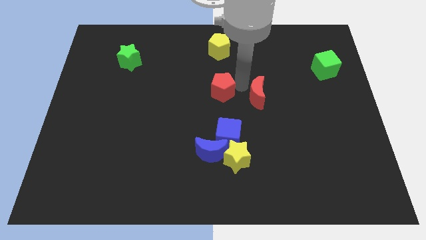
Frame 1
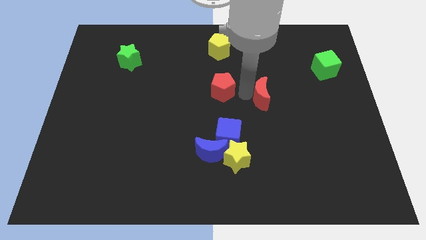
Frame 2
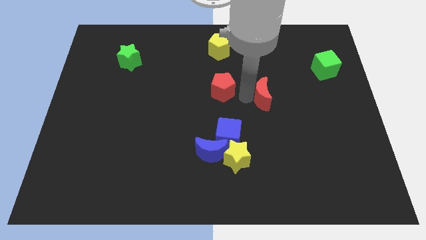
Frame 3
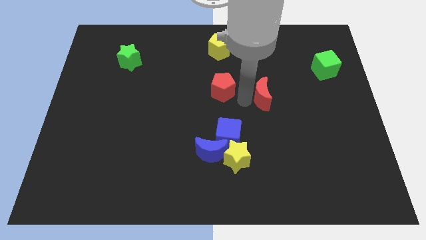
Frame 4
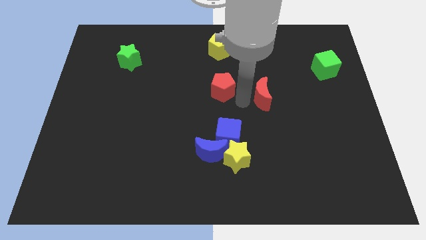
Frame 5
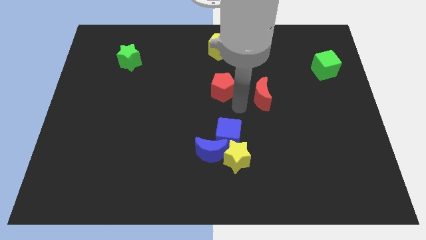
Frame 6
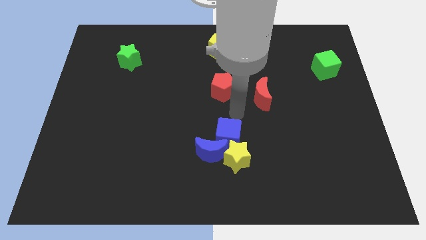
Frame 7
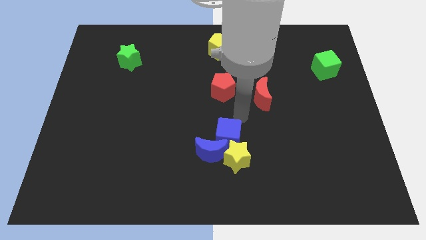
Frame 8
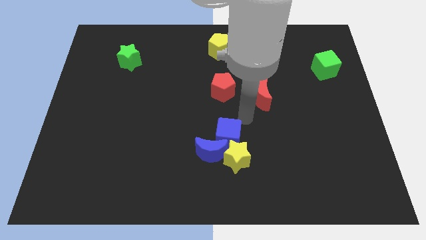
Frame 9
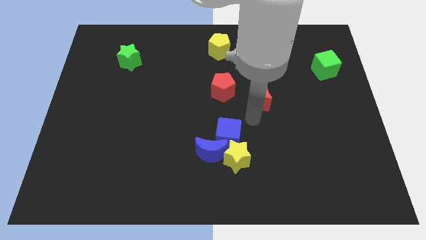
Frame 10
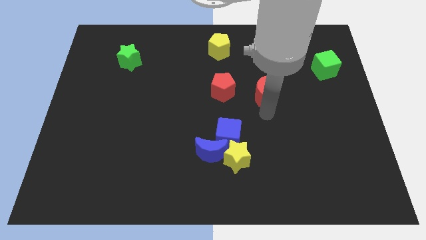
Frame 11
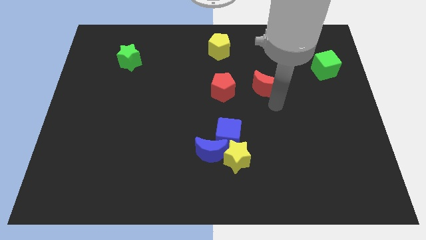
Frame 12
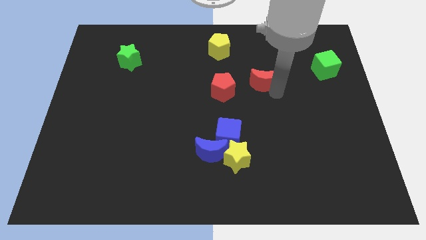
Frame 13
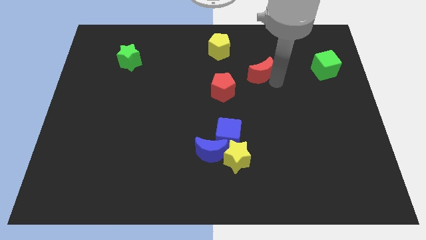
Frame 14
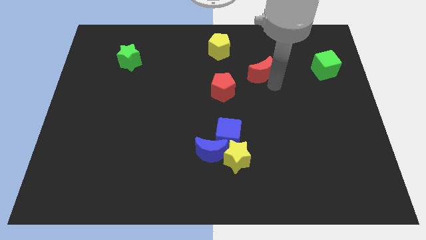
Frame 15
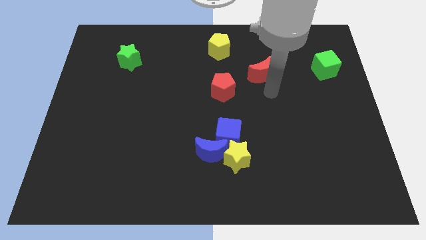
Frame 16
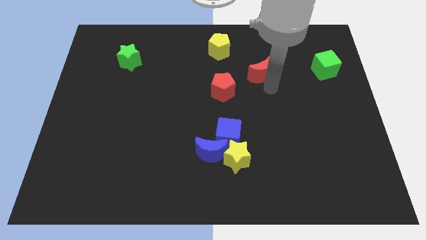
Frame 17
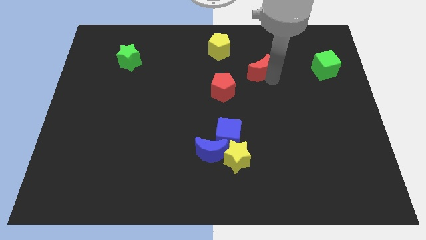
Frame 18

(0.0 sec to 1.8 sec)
move the red crescent to the top right of the red pentagon

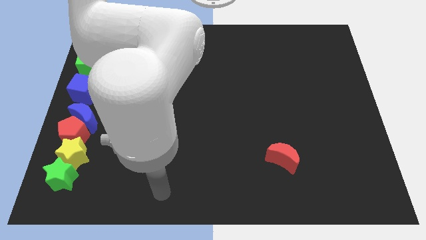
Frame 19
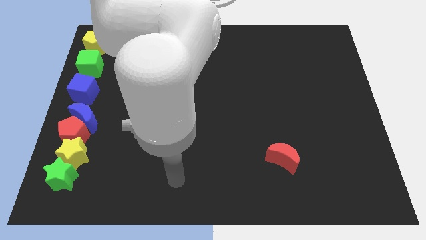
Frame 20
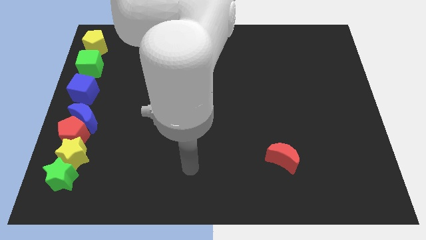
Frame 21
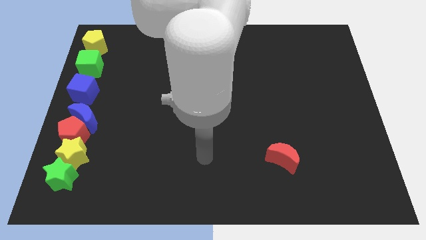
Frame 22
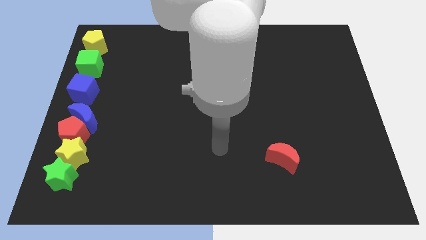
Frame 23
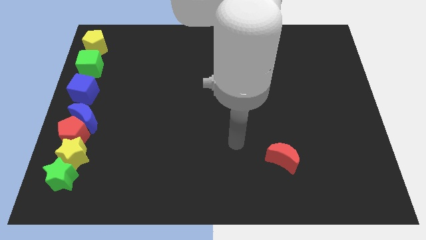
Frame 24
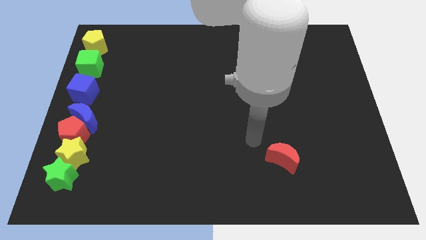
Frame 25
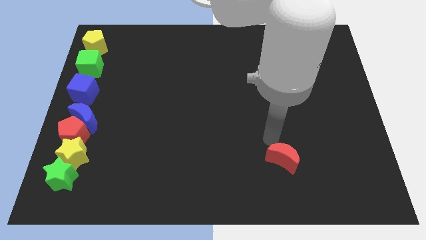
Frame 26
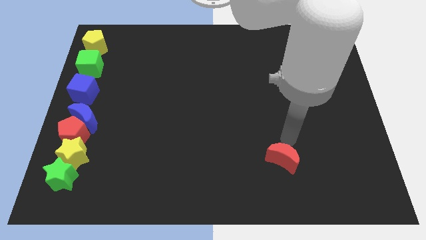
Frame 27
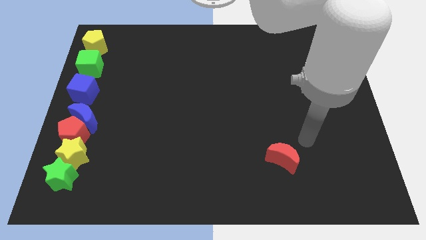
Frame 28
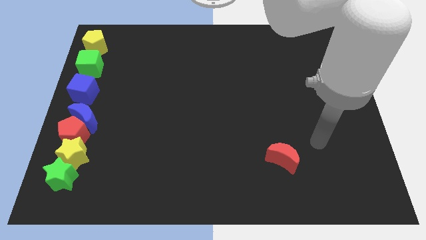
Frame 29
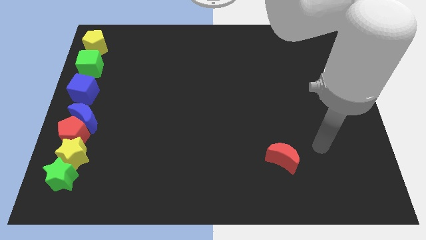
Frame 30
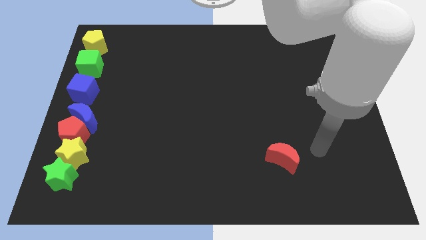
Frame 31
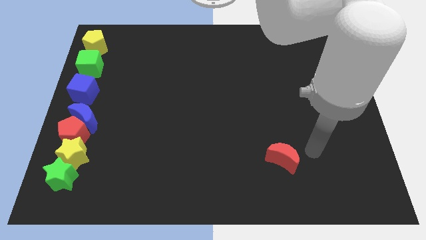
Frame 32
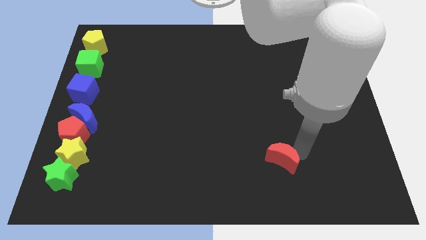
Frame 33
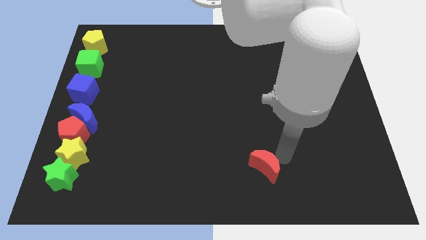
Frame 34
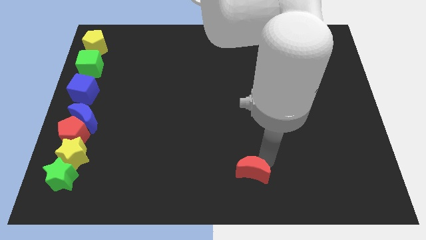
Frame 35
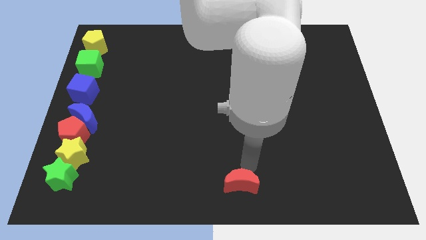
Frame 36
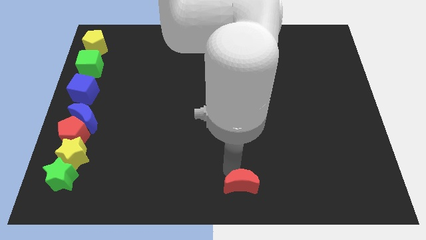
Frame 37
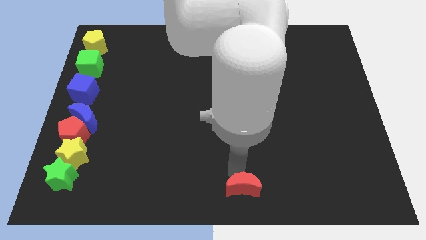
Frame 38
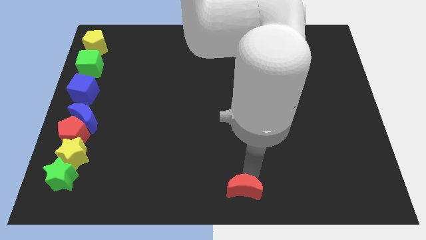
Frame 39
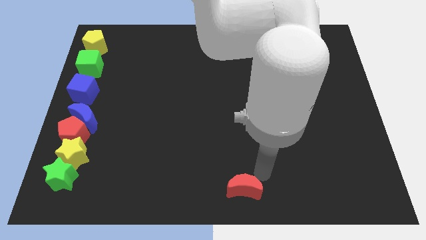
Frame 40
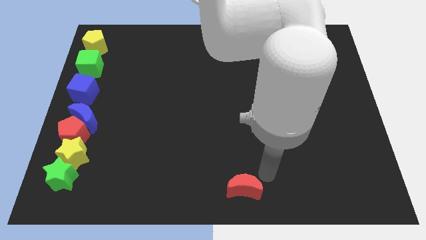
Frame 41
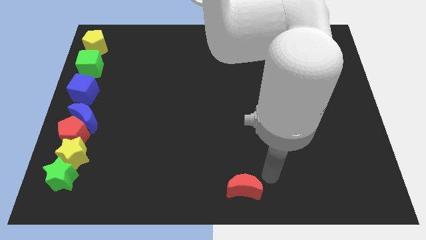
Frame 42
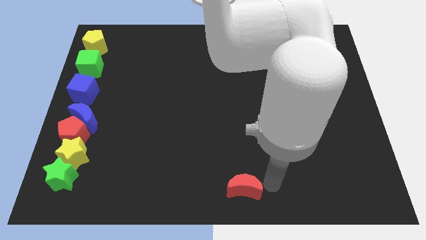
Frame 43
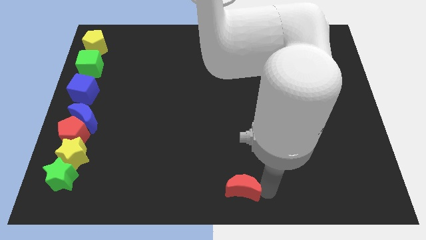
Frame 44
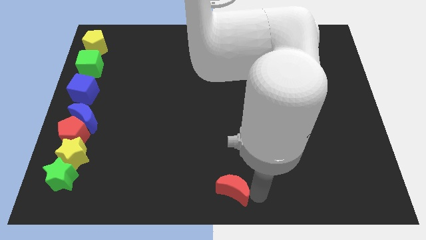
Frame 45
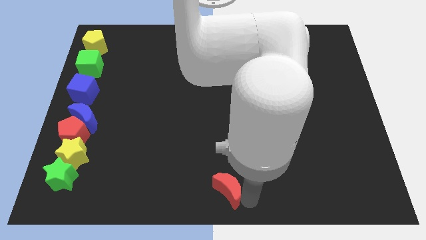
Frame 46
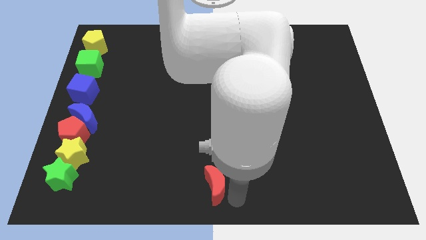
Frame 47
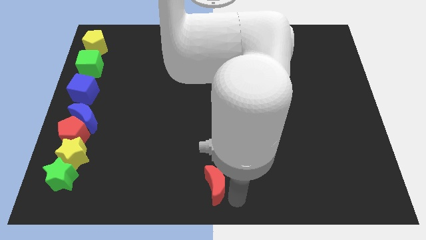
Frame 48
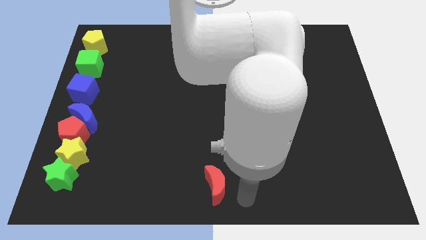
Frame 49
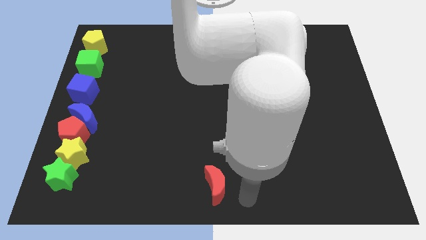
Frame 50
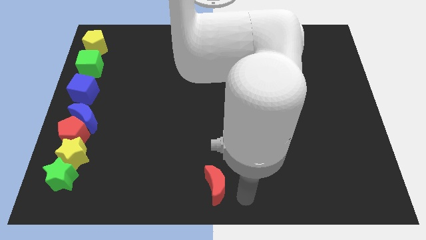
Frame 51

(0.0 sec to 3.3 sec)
push the red crescent slightly towards the bottom center of the board

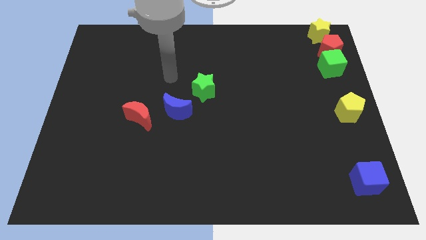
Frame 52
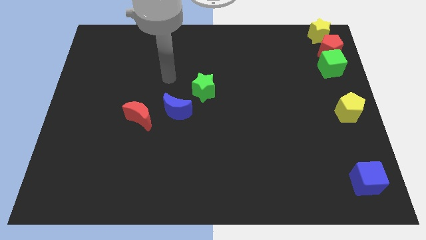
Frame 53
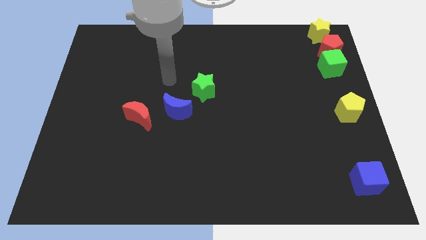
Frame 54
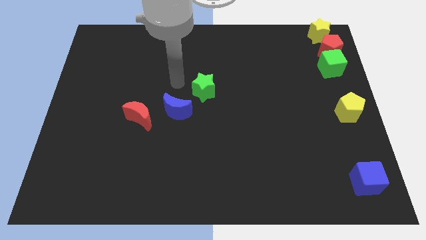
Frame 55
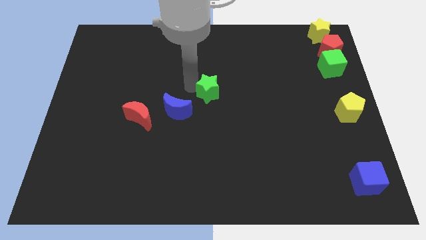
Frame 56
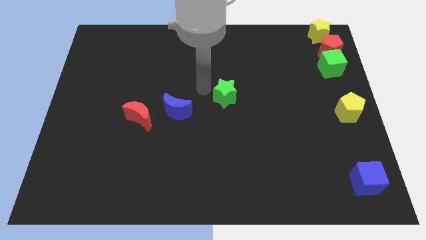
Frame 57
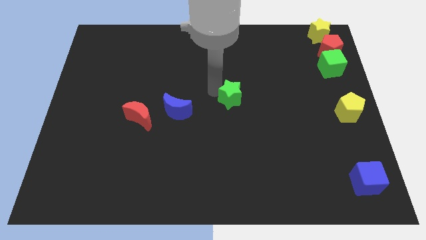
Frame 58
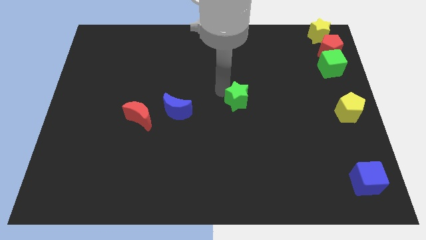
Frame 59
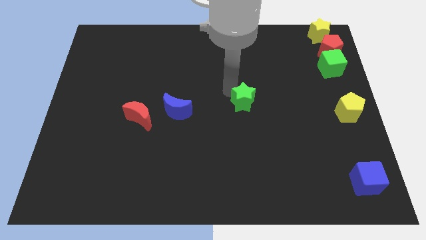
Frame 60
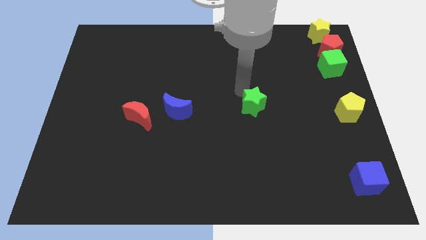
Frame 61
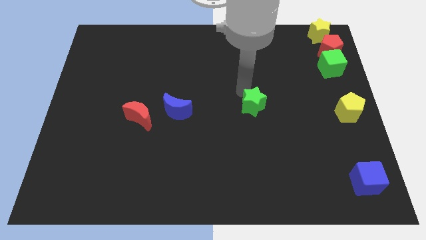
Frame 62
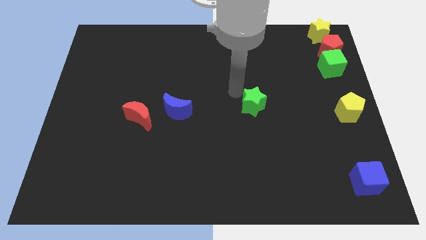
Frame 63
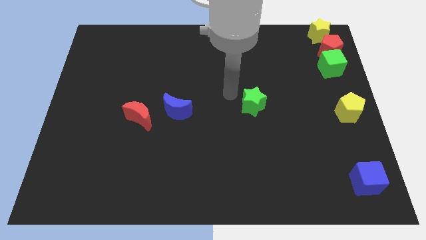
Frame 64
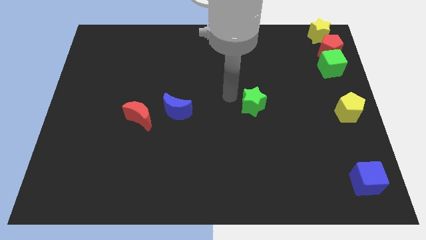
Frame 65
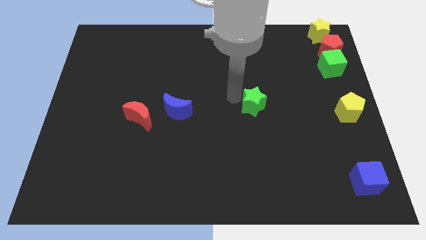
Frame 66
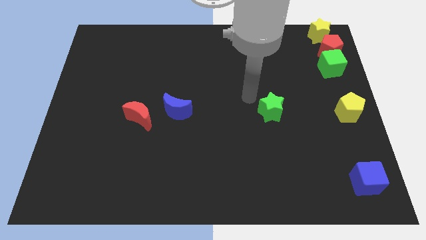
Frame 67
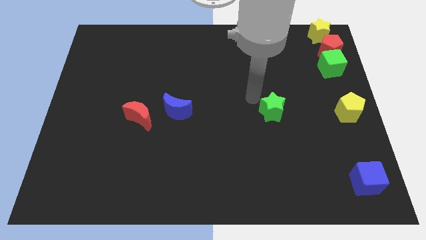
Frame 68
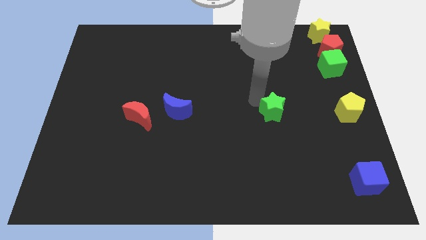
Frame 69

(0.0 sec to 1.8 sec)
place the green star right to the blue moon

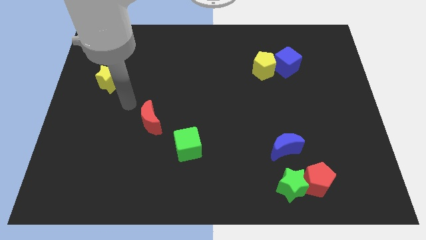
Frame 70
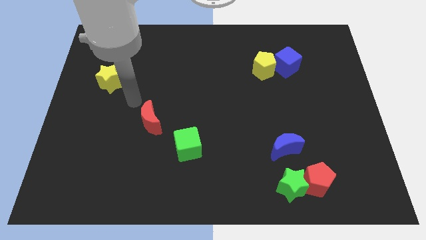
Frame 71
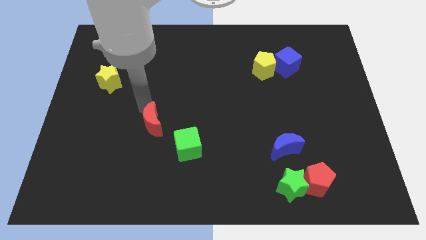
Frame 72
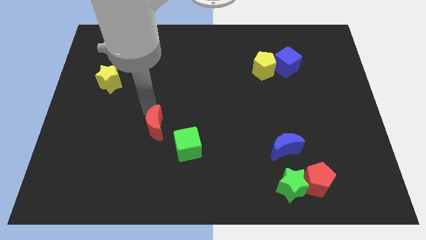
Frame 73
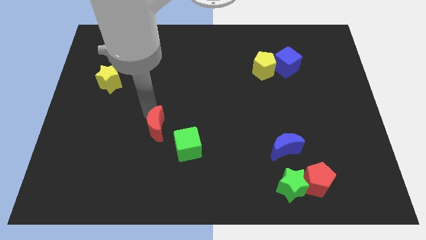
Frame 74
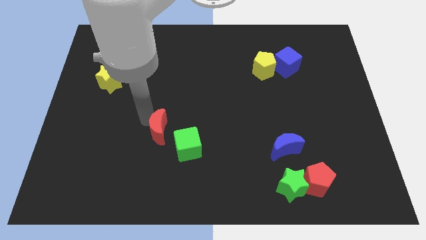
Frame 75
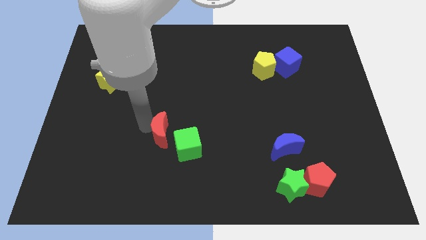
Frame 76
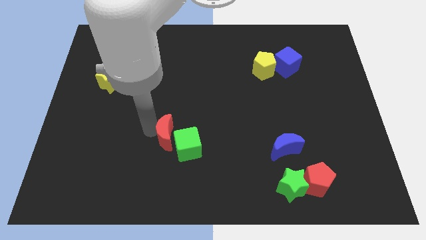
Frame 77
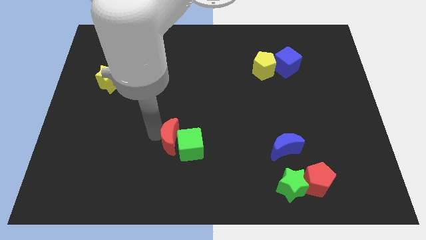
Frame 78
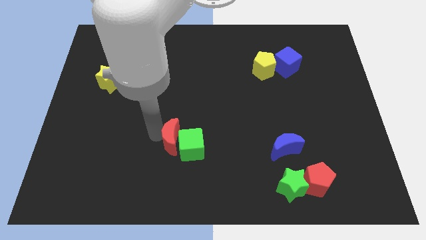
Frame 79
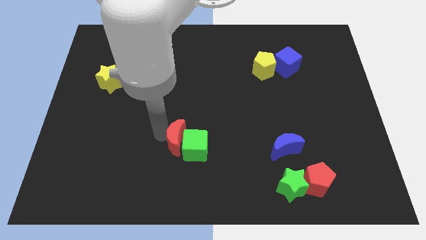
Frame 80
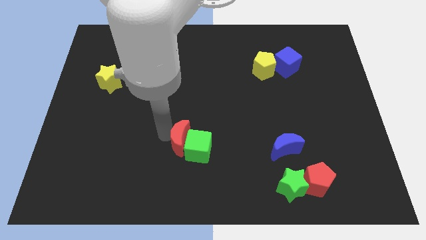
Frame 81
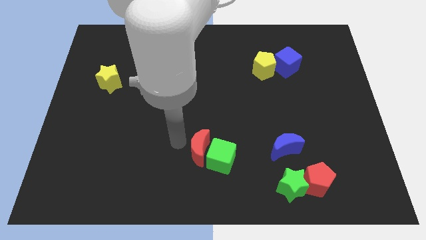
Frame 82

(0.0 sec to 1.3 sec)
push the red crescent into the green cube

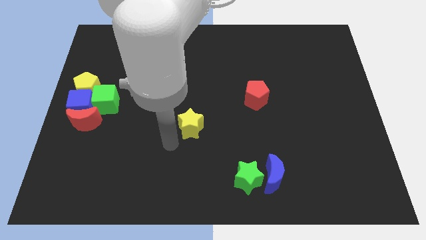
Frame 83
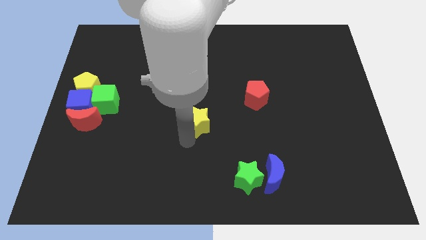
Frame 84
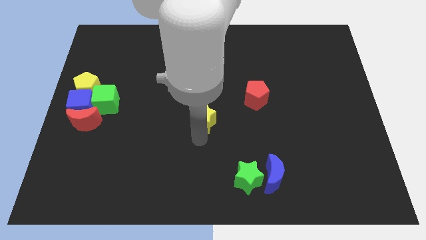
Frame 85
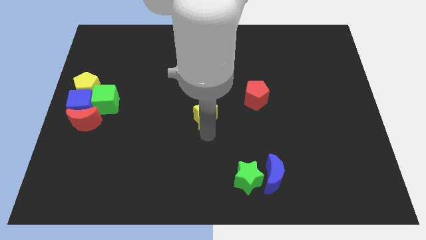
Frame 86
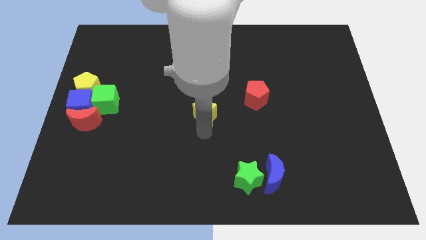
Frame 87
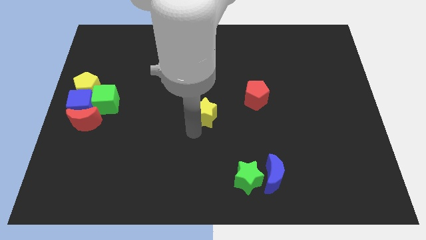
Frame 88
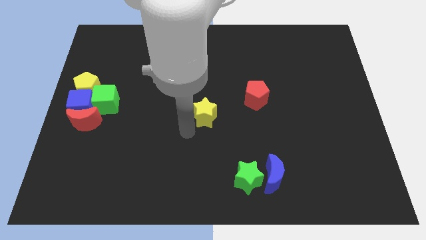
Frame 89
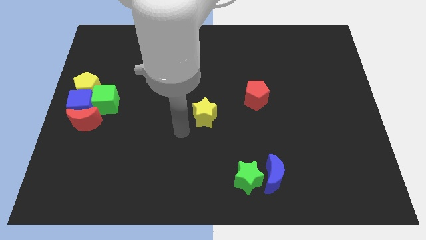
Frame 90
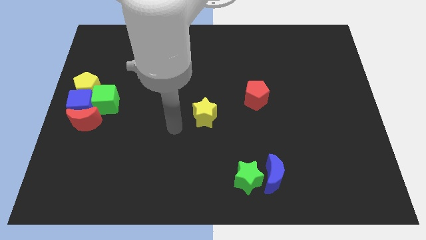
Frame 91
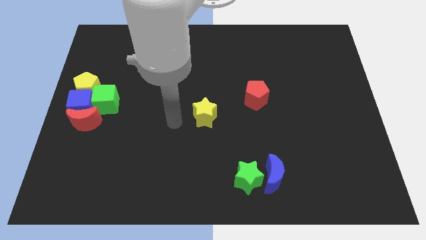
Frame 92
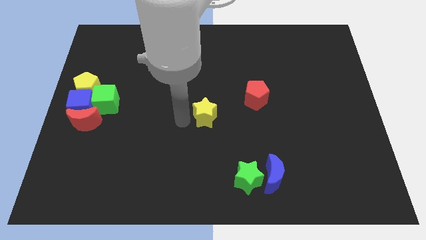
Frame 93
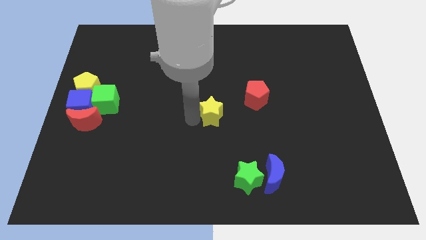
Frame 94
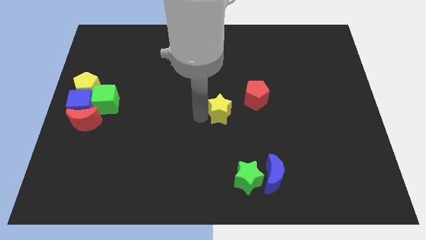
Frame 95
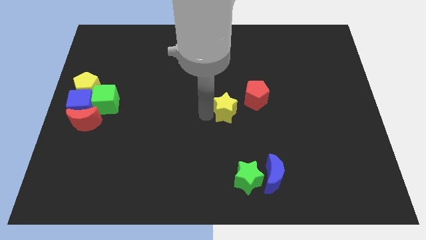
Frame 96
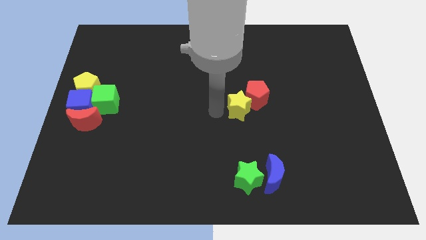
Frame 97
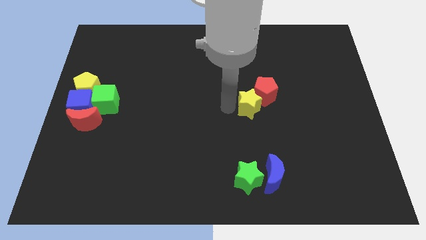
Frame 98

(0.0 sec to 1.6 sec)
move the yellow star into the red pentagon
